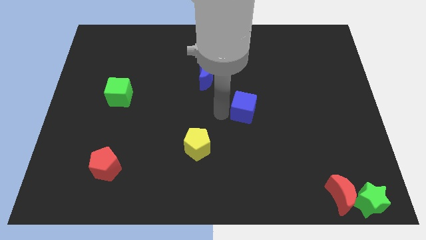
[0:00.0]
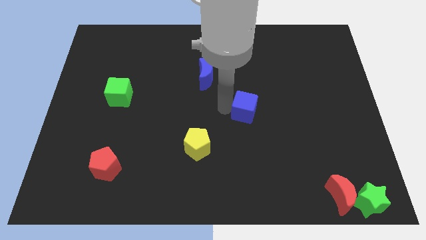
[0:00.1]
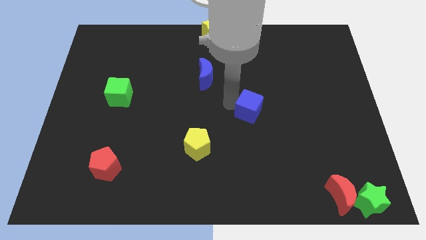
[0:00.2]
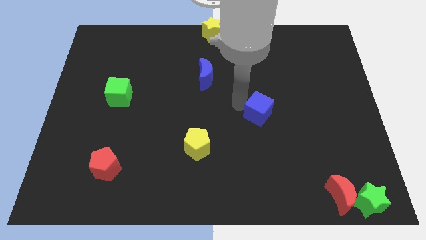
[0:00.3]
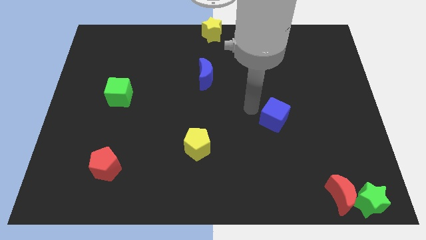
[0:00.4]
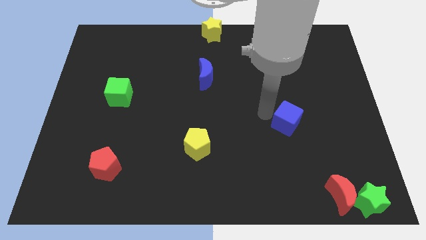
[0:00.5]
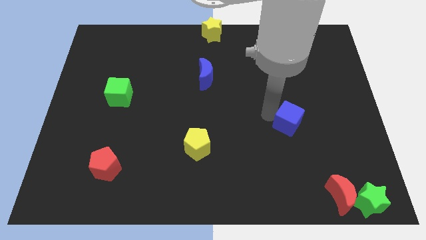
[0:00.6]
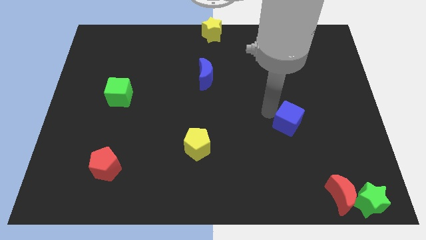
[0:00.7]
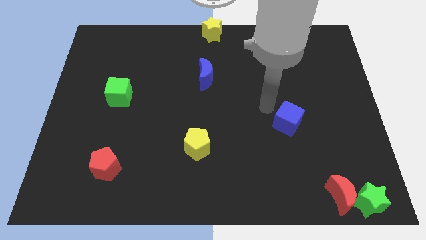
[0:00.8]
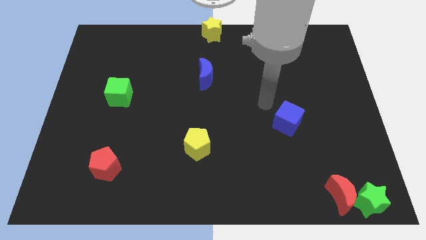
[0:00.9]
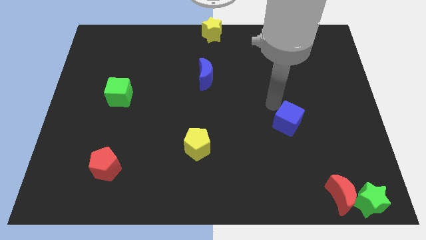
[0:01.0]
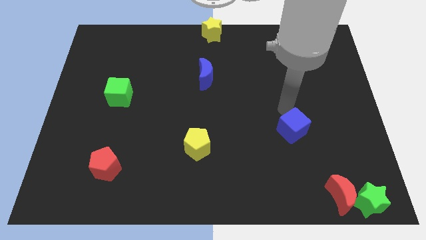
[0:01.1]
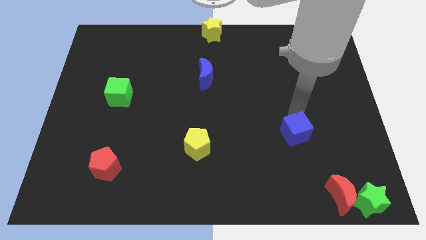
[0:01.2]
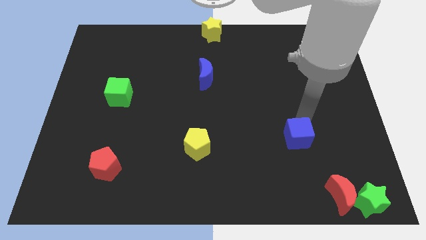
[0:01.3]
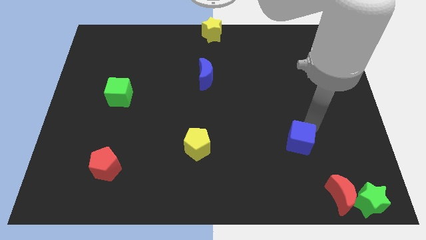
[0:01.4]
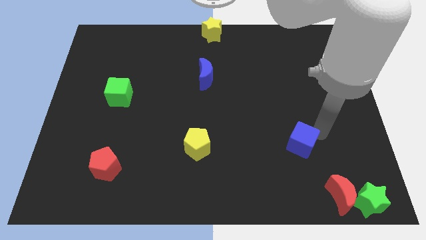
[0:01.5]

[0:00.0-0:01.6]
place the blue cube to the right of the yellow pentagon

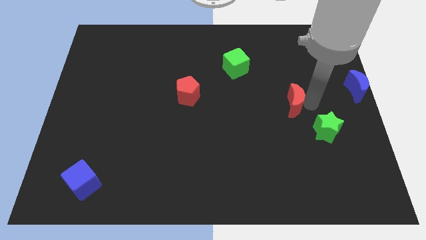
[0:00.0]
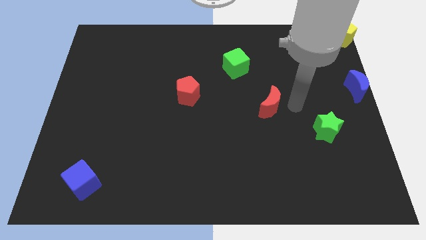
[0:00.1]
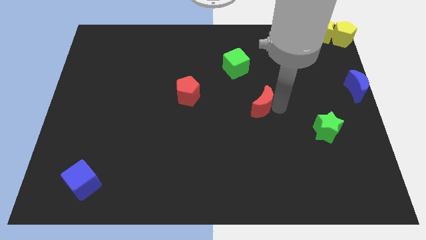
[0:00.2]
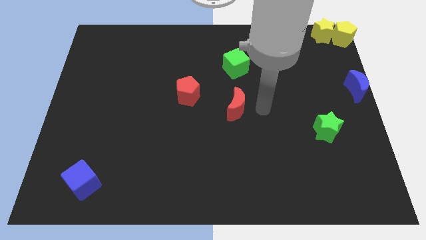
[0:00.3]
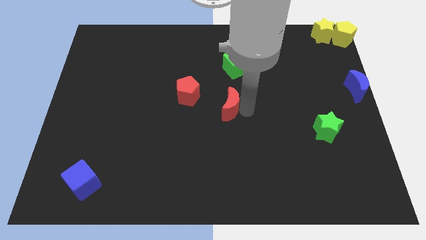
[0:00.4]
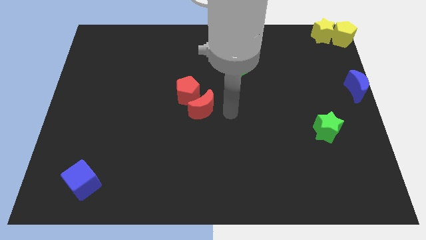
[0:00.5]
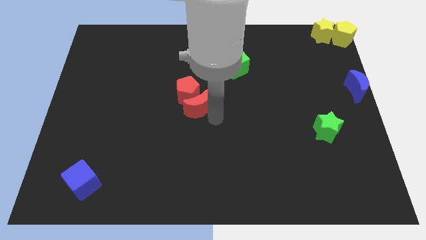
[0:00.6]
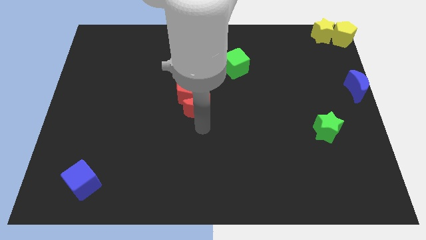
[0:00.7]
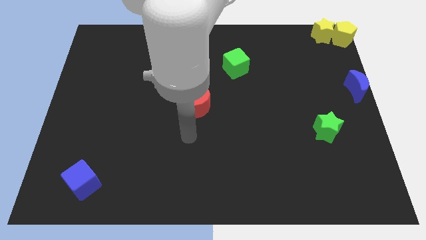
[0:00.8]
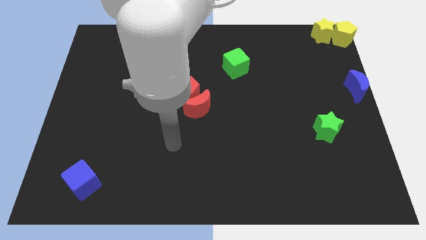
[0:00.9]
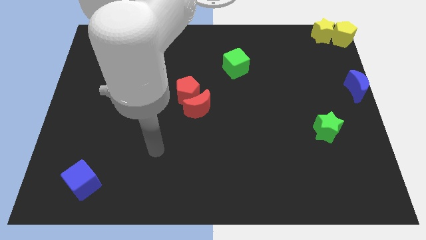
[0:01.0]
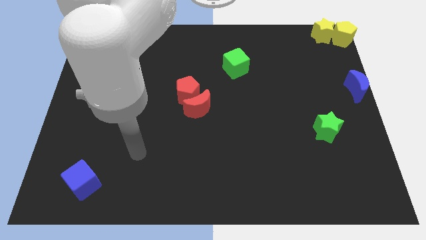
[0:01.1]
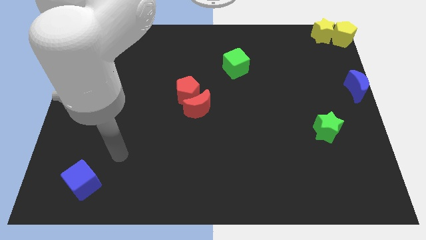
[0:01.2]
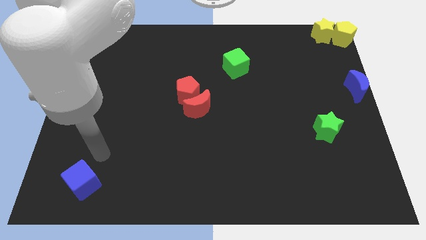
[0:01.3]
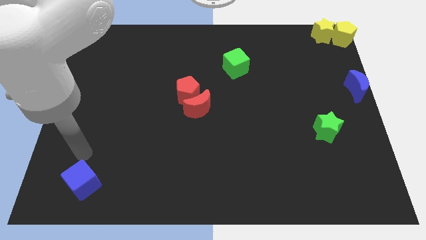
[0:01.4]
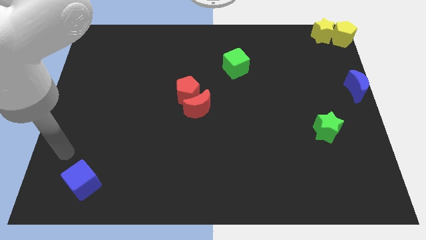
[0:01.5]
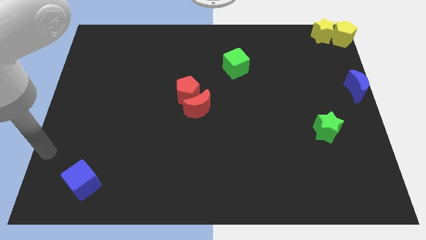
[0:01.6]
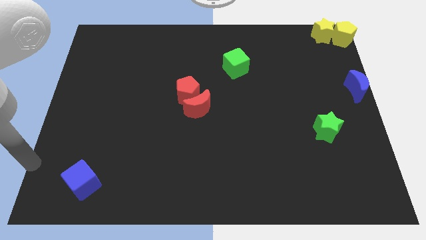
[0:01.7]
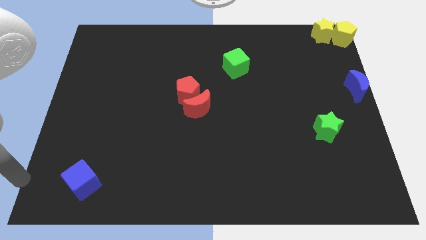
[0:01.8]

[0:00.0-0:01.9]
place the red moon to the bottom side of the red pentagon

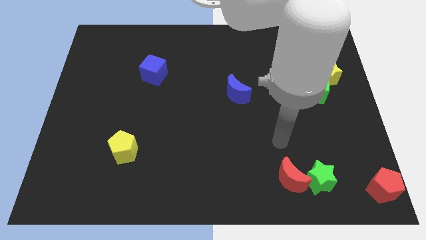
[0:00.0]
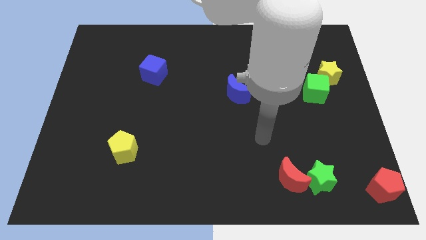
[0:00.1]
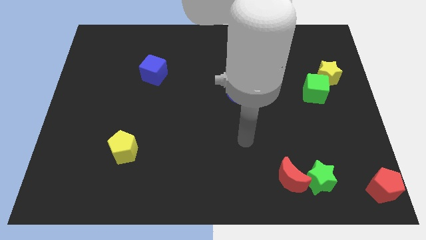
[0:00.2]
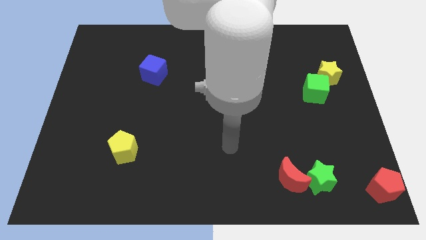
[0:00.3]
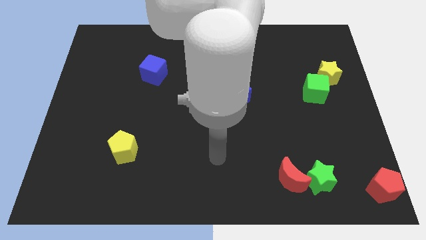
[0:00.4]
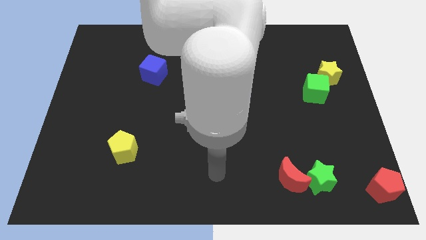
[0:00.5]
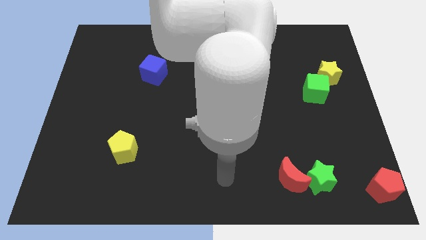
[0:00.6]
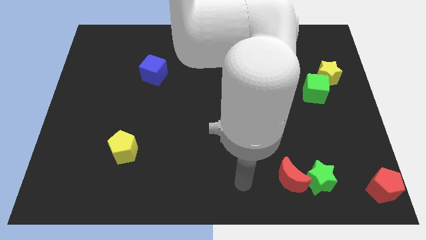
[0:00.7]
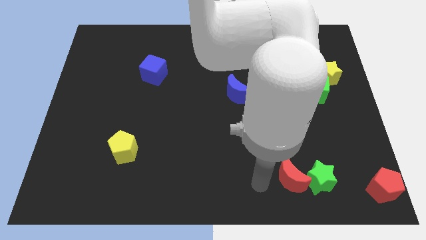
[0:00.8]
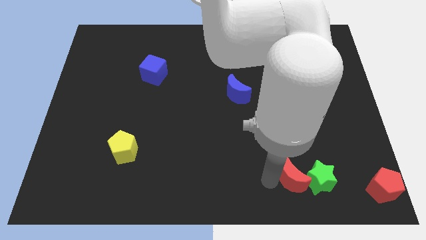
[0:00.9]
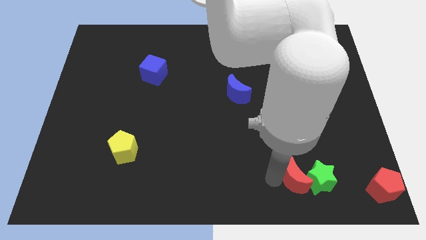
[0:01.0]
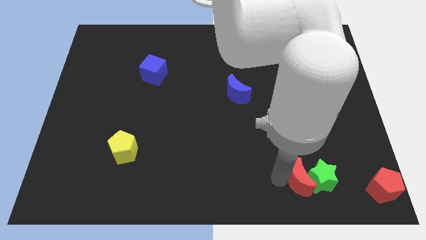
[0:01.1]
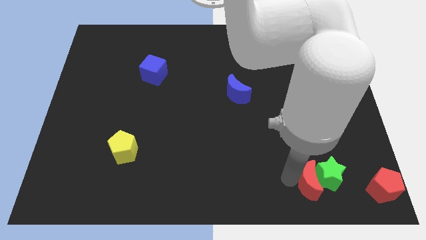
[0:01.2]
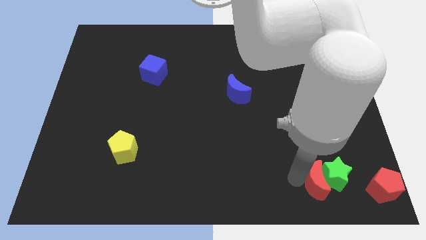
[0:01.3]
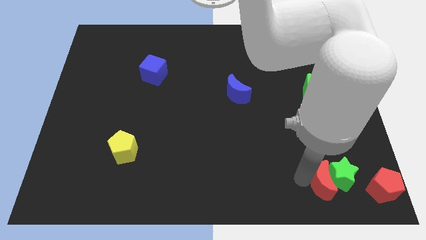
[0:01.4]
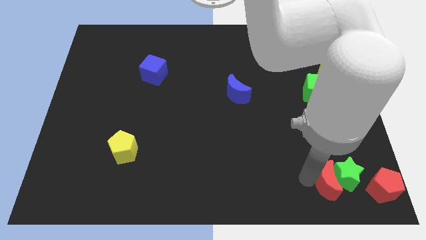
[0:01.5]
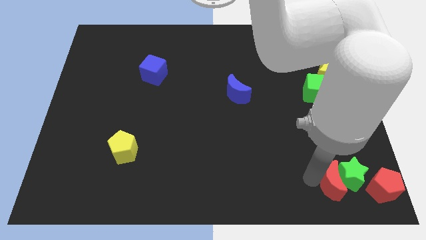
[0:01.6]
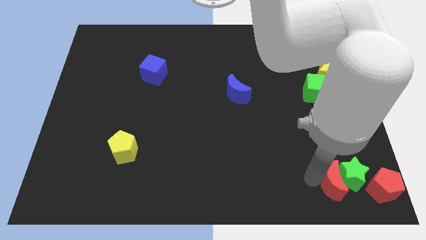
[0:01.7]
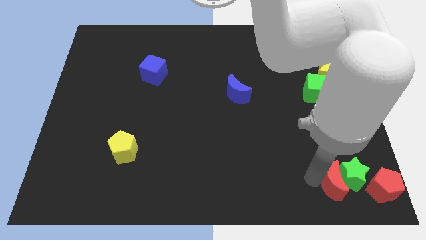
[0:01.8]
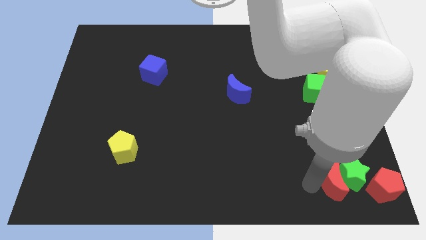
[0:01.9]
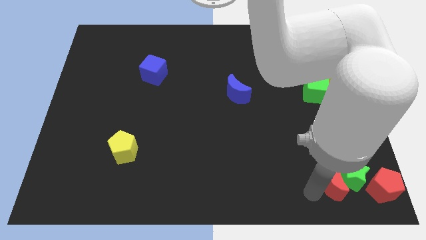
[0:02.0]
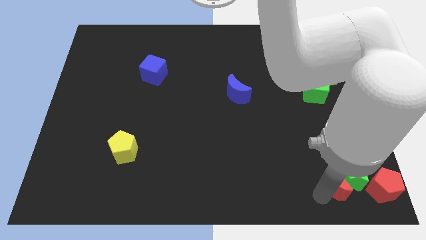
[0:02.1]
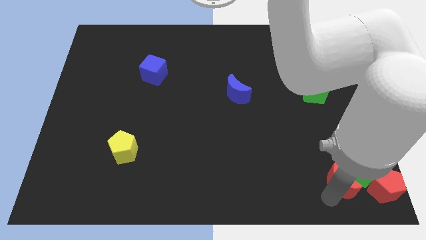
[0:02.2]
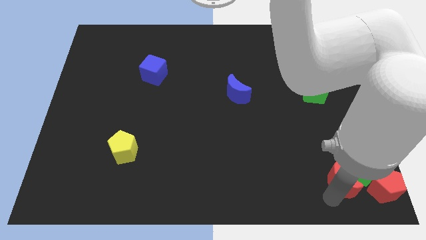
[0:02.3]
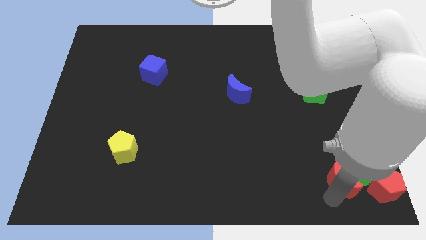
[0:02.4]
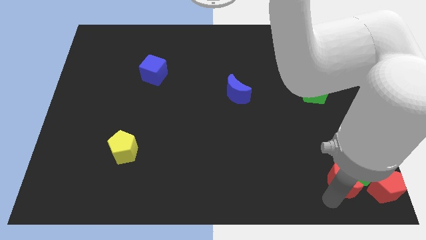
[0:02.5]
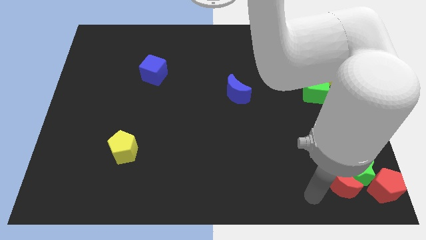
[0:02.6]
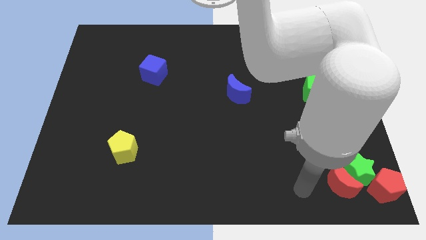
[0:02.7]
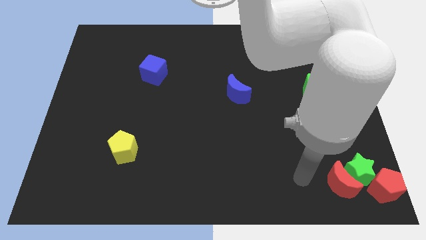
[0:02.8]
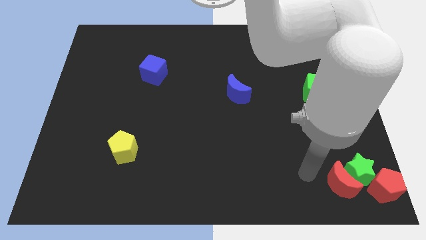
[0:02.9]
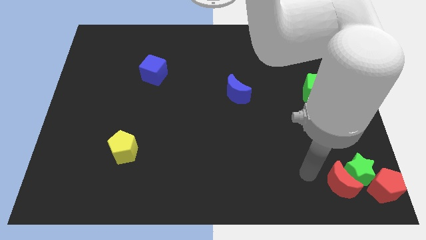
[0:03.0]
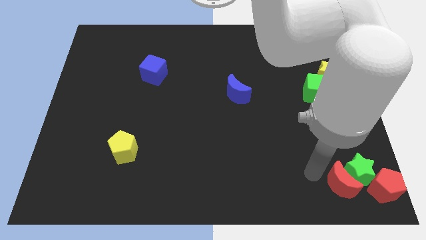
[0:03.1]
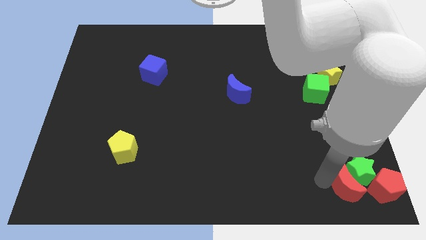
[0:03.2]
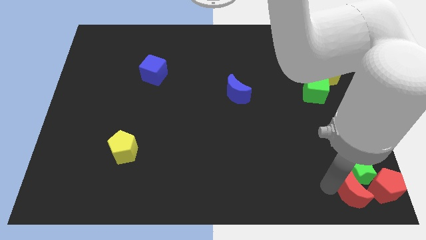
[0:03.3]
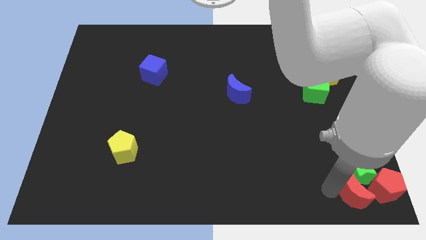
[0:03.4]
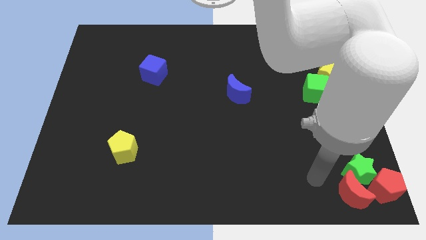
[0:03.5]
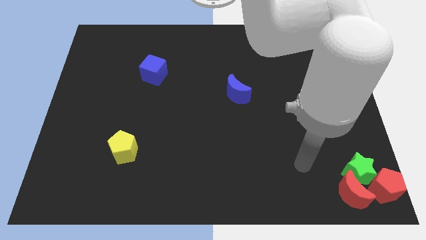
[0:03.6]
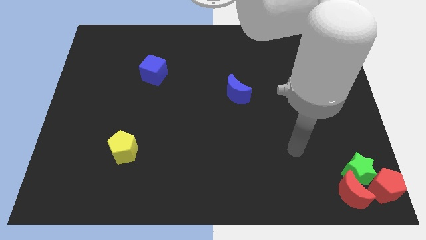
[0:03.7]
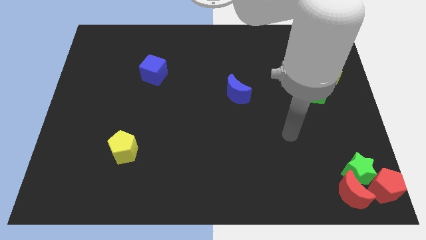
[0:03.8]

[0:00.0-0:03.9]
move the red moon towards the red pentagon

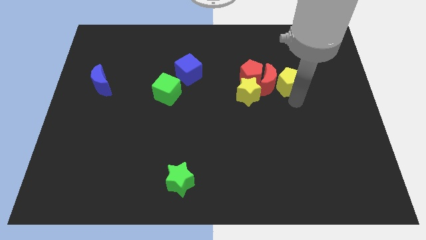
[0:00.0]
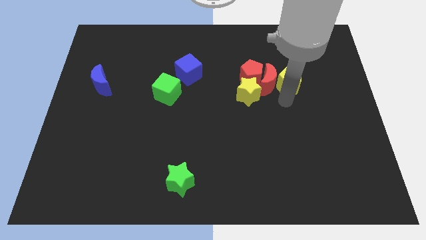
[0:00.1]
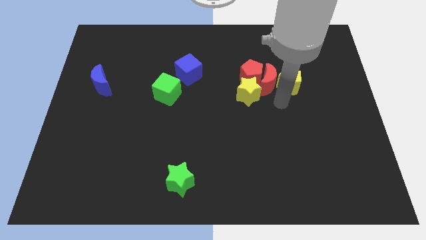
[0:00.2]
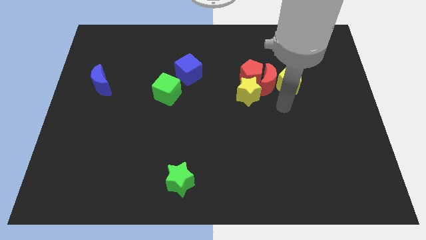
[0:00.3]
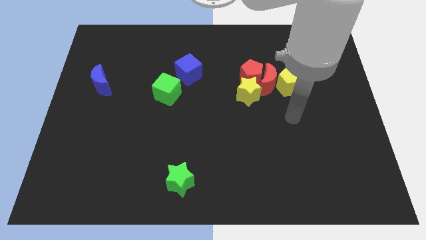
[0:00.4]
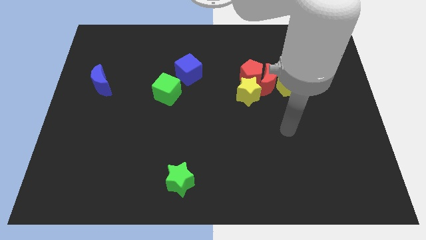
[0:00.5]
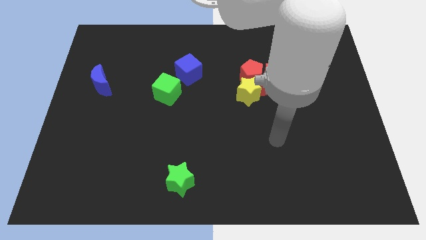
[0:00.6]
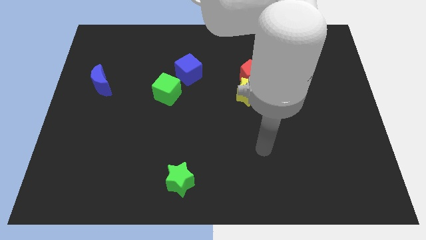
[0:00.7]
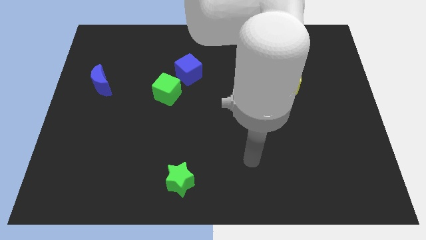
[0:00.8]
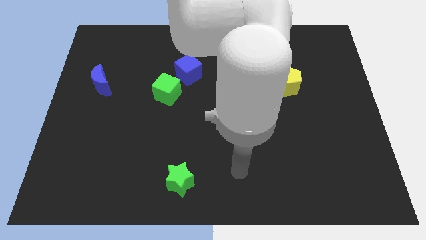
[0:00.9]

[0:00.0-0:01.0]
move your arm away from the yellow pentagon

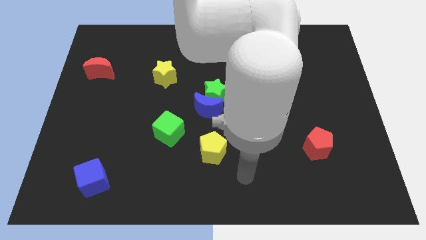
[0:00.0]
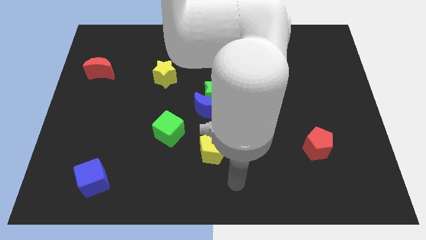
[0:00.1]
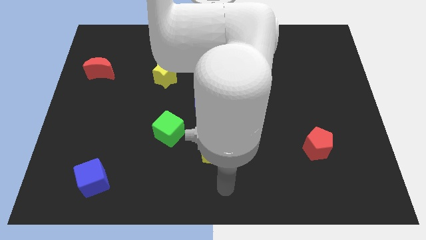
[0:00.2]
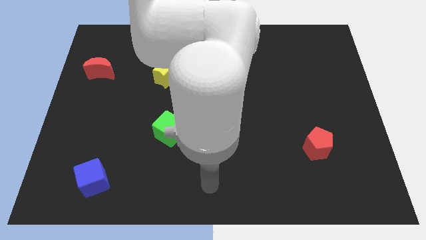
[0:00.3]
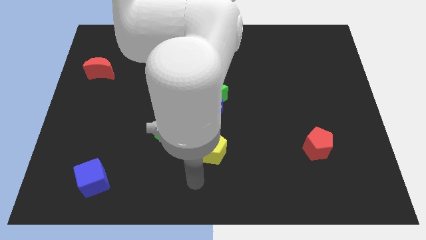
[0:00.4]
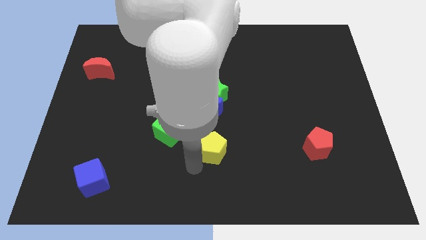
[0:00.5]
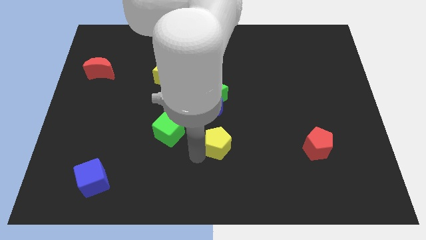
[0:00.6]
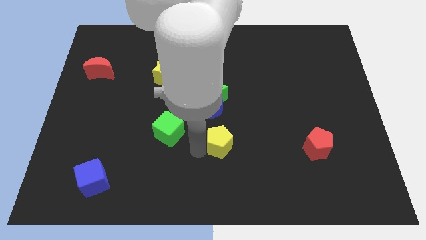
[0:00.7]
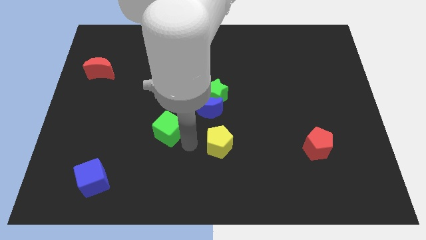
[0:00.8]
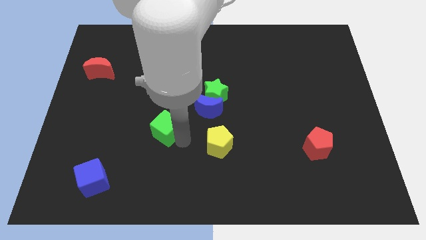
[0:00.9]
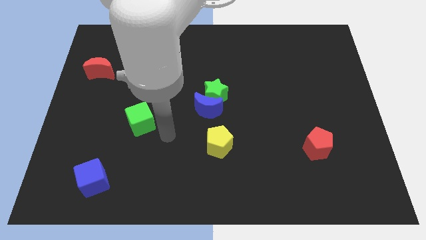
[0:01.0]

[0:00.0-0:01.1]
place your arm in between green cube and yellow pentagon
